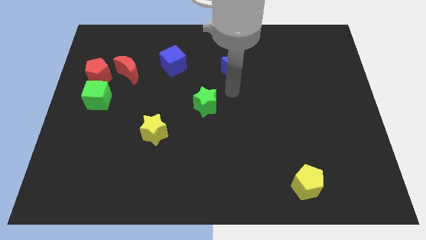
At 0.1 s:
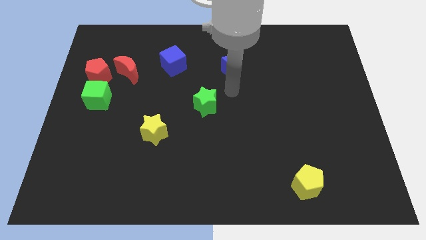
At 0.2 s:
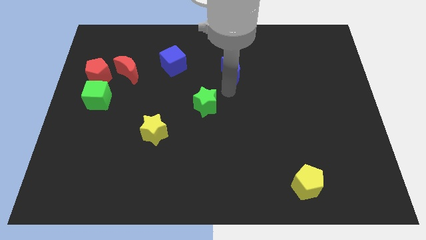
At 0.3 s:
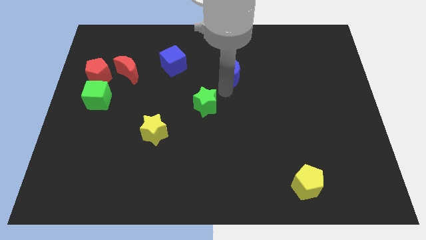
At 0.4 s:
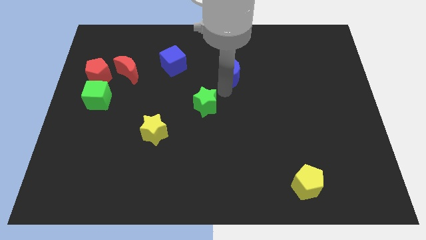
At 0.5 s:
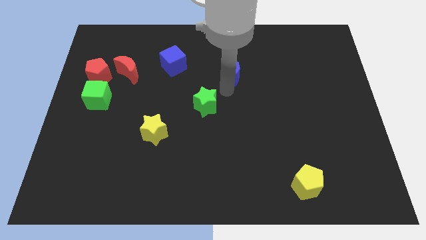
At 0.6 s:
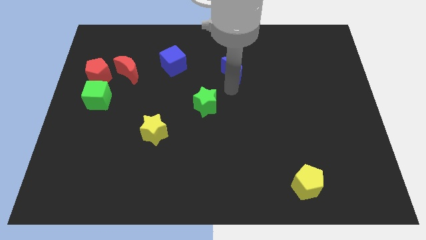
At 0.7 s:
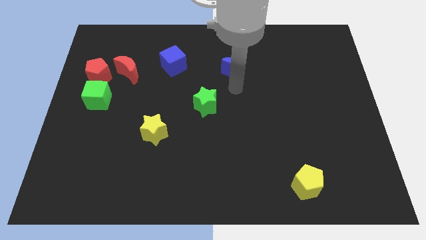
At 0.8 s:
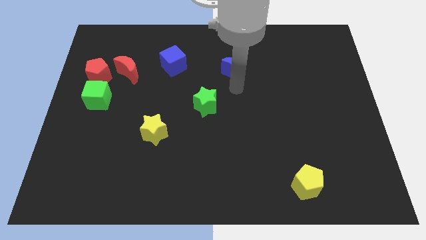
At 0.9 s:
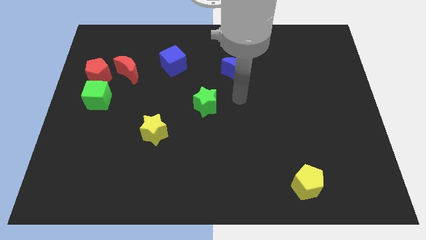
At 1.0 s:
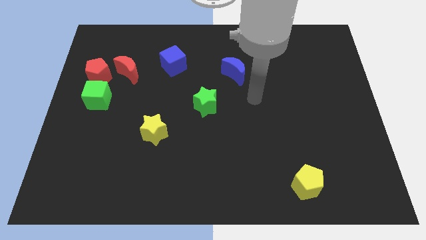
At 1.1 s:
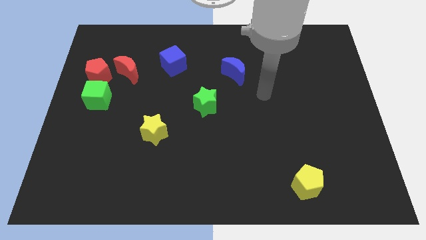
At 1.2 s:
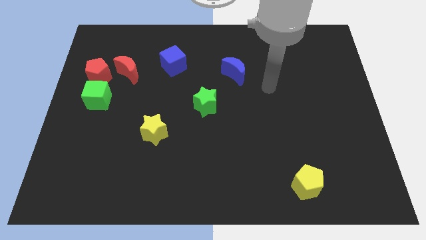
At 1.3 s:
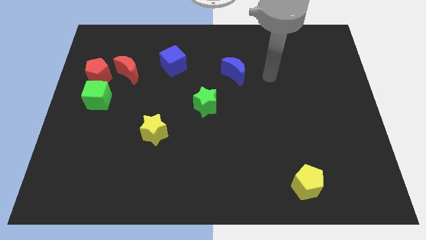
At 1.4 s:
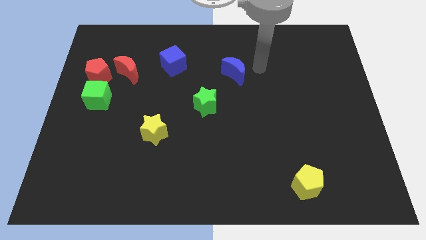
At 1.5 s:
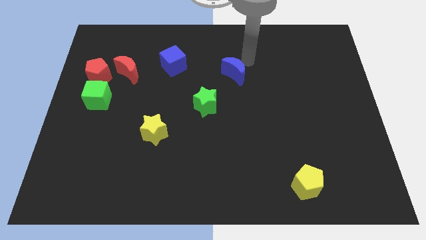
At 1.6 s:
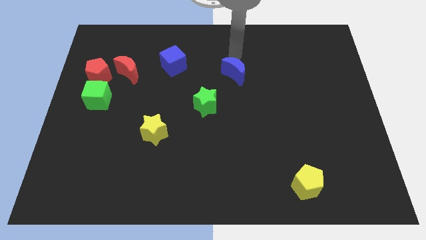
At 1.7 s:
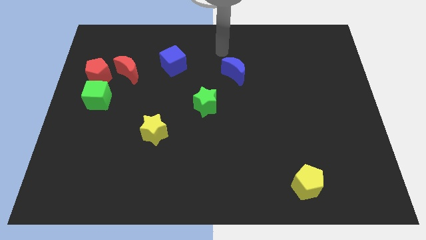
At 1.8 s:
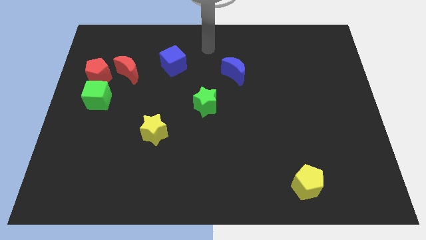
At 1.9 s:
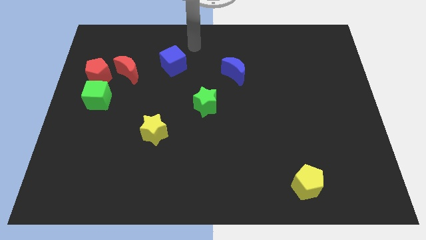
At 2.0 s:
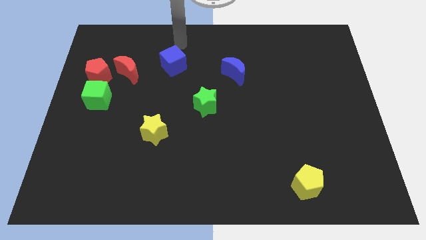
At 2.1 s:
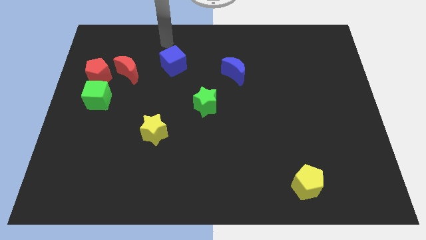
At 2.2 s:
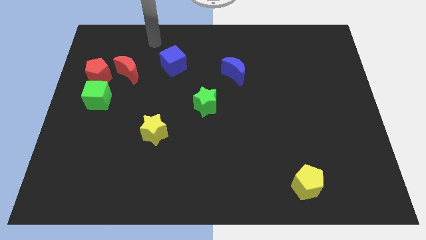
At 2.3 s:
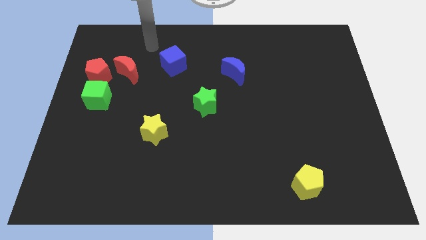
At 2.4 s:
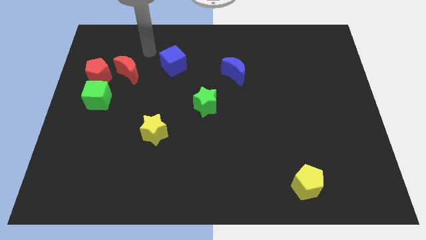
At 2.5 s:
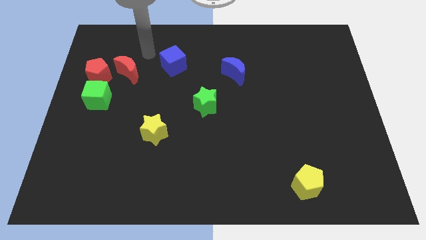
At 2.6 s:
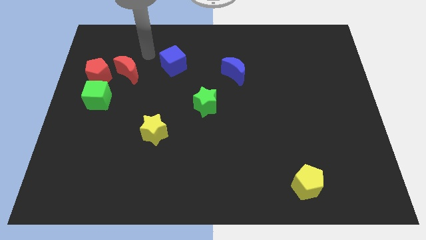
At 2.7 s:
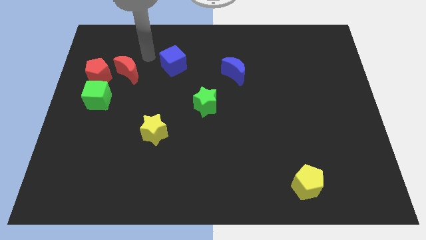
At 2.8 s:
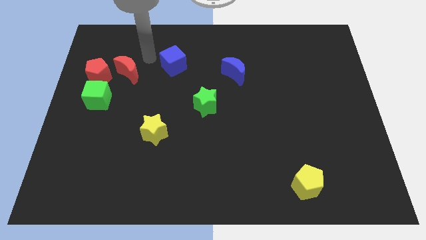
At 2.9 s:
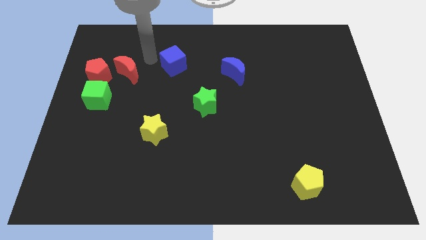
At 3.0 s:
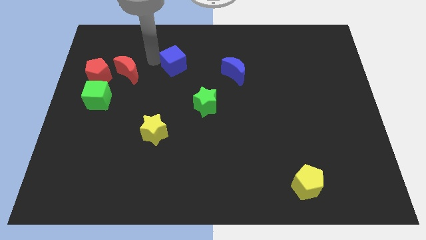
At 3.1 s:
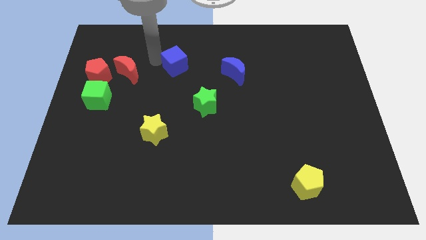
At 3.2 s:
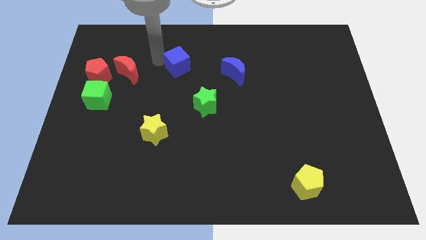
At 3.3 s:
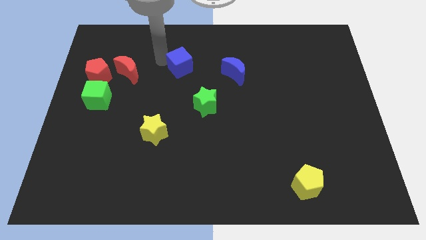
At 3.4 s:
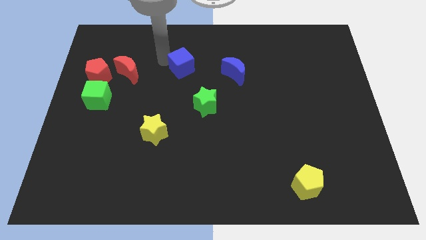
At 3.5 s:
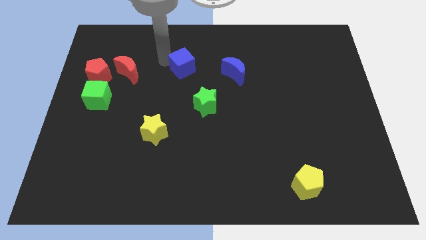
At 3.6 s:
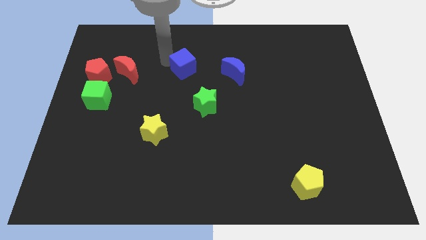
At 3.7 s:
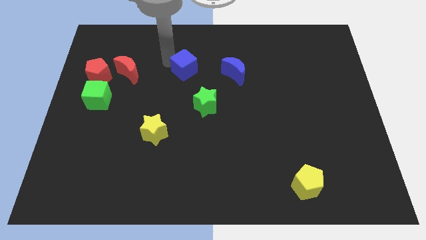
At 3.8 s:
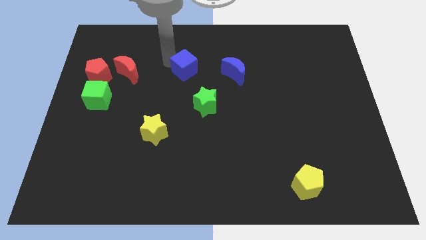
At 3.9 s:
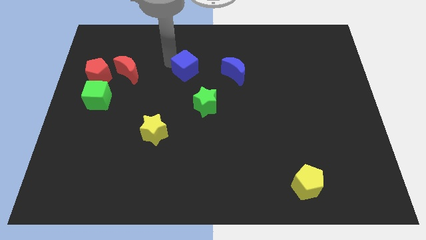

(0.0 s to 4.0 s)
move the blue cube to the left of the blue moon

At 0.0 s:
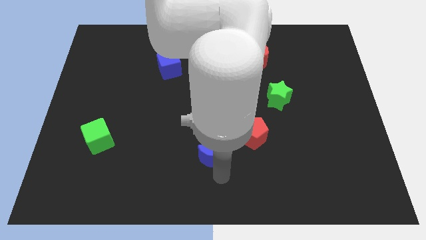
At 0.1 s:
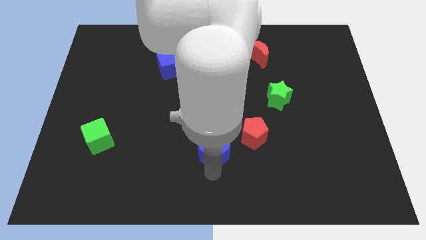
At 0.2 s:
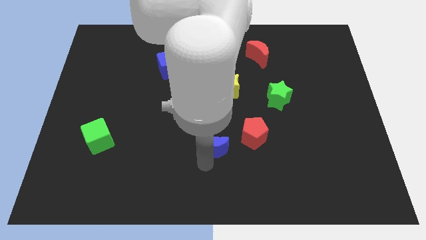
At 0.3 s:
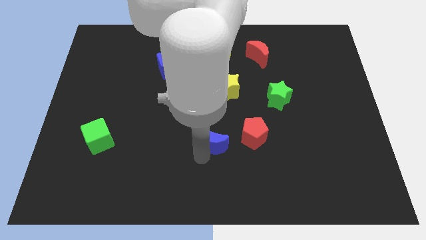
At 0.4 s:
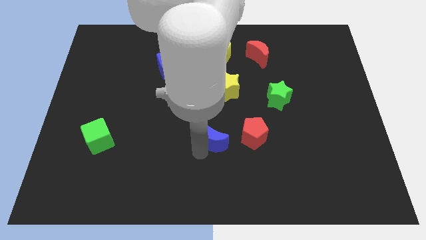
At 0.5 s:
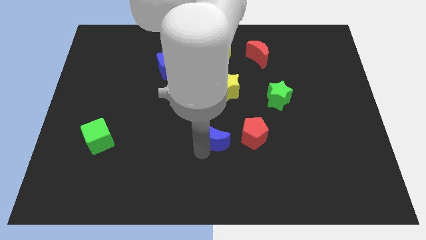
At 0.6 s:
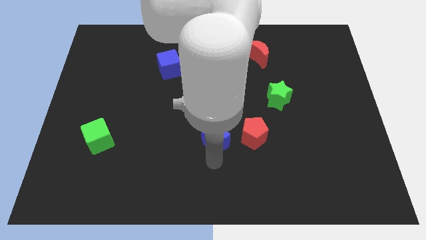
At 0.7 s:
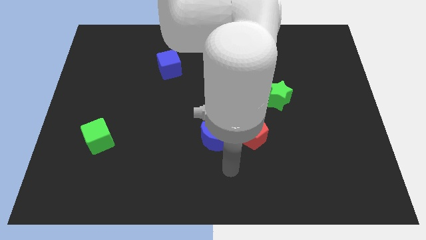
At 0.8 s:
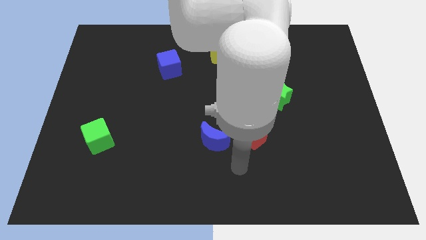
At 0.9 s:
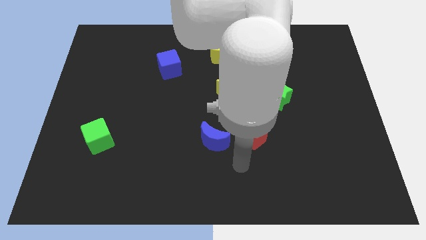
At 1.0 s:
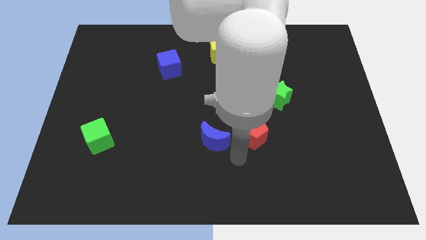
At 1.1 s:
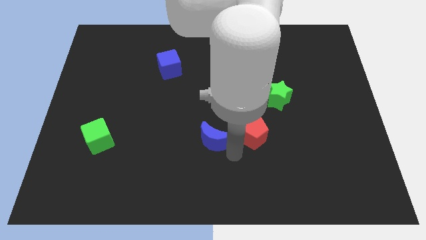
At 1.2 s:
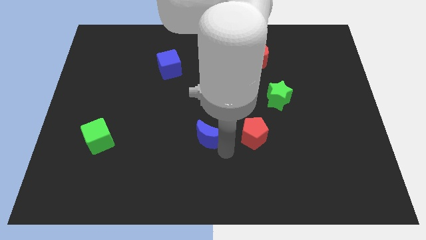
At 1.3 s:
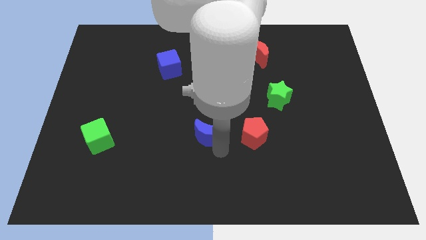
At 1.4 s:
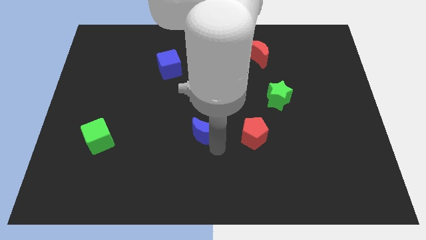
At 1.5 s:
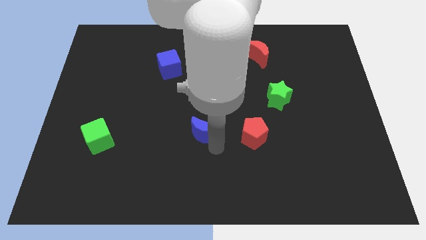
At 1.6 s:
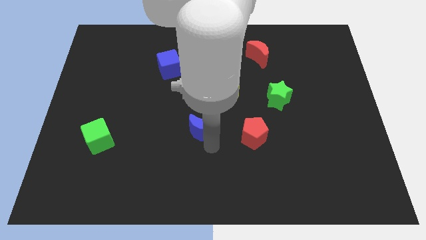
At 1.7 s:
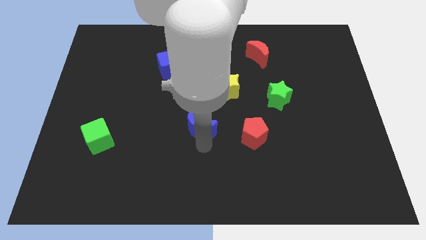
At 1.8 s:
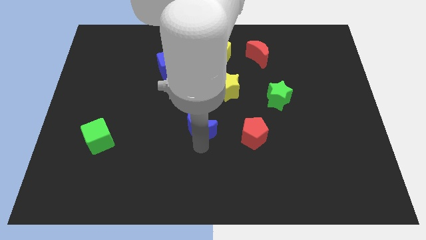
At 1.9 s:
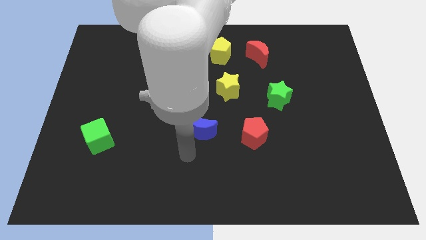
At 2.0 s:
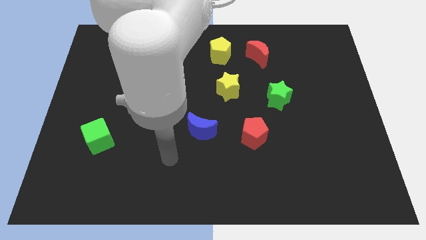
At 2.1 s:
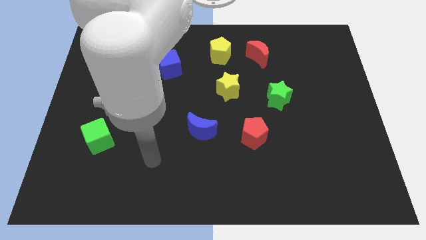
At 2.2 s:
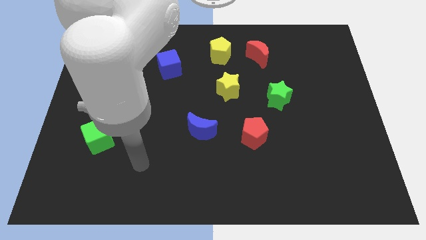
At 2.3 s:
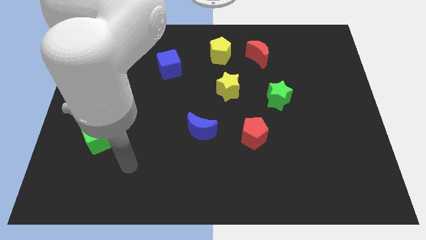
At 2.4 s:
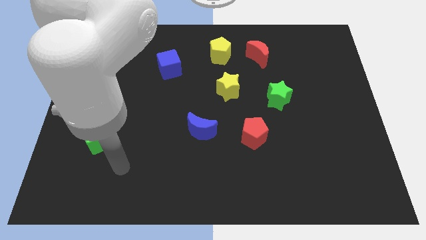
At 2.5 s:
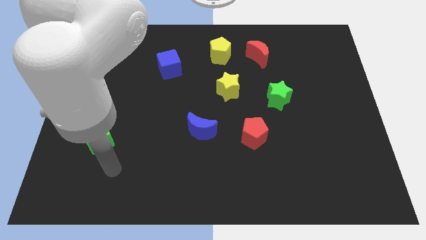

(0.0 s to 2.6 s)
slightly push blue moon upwards

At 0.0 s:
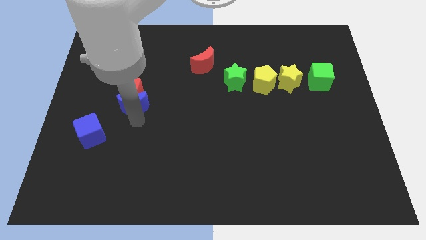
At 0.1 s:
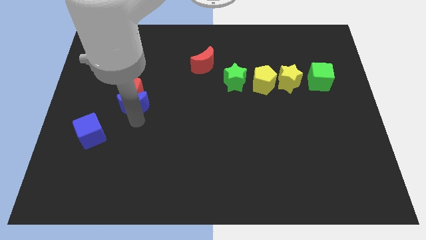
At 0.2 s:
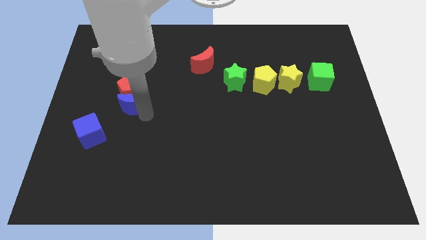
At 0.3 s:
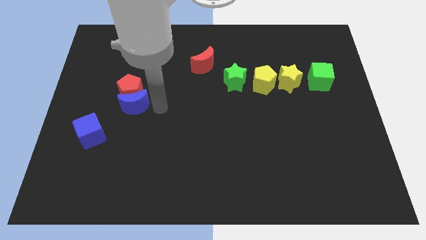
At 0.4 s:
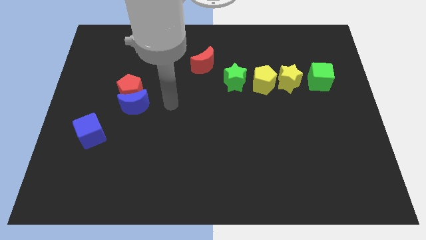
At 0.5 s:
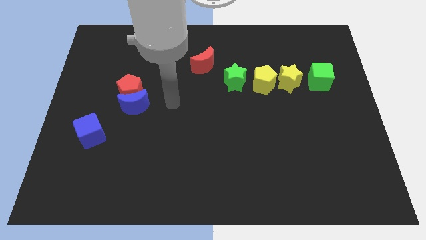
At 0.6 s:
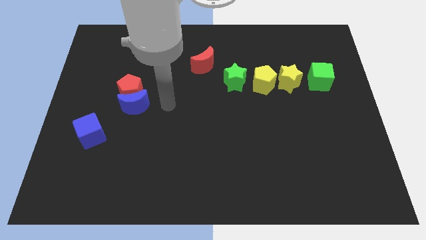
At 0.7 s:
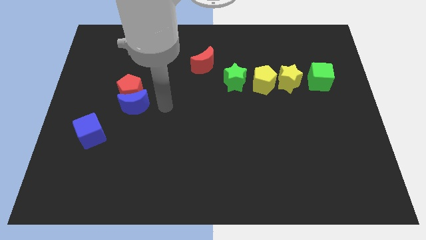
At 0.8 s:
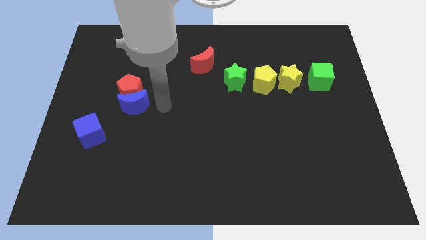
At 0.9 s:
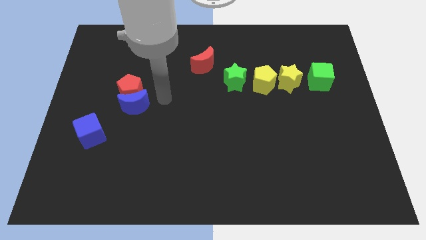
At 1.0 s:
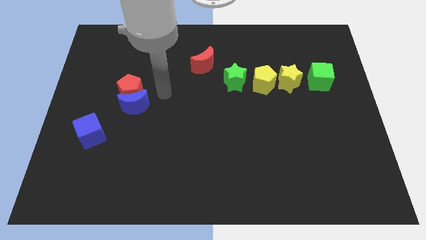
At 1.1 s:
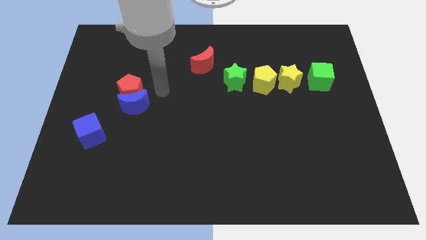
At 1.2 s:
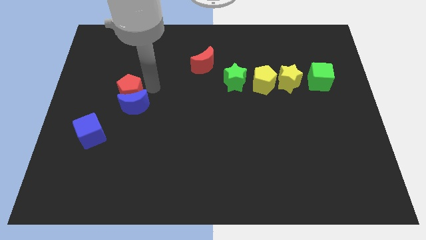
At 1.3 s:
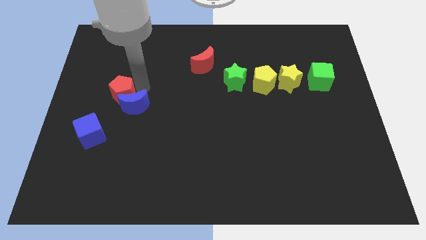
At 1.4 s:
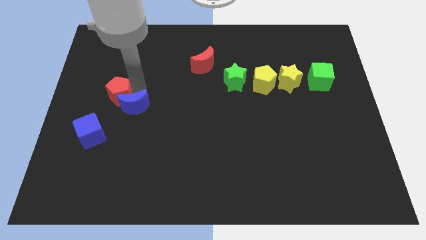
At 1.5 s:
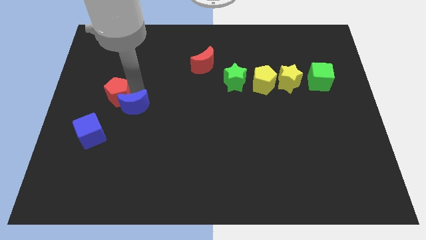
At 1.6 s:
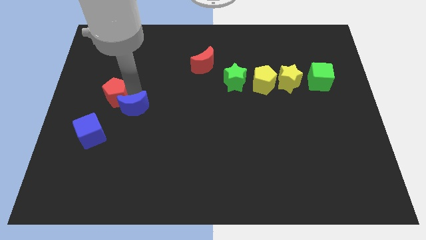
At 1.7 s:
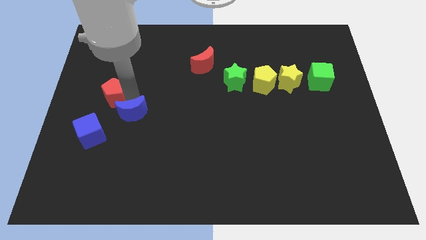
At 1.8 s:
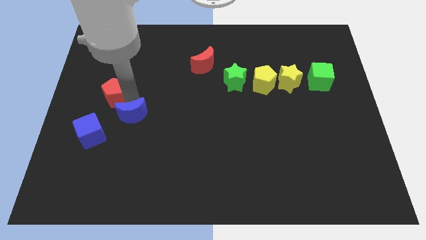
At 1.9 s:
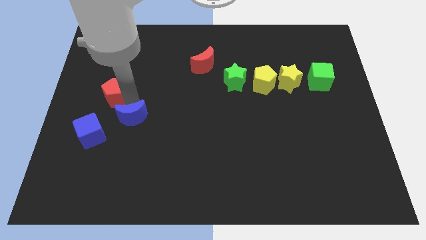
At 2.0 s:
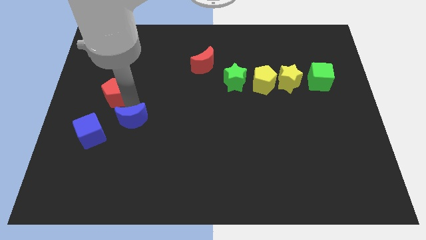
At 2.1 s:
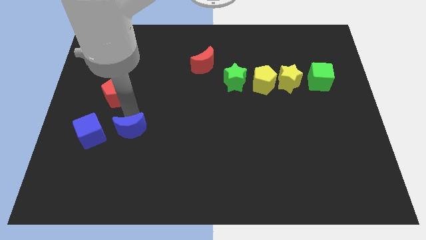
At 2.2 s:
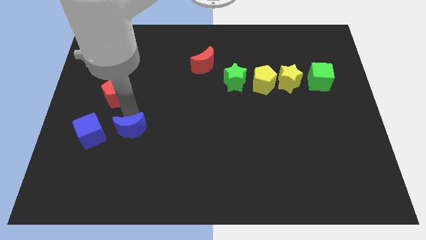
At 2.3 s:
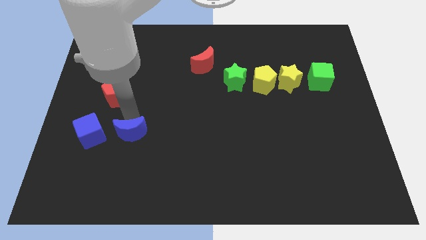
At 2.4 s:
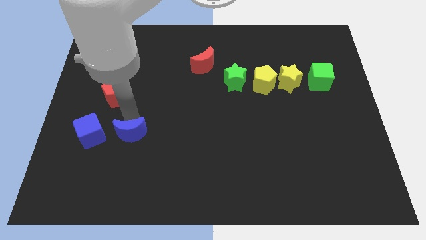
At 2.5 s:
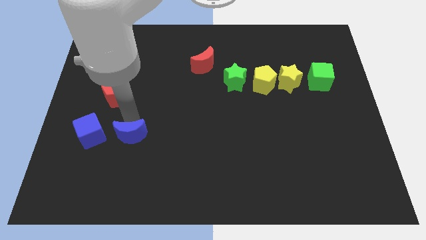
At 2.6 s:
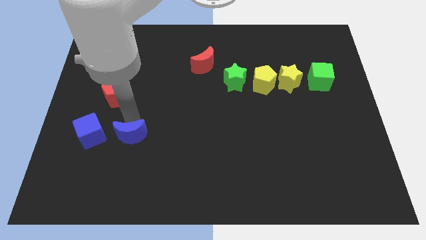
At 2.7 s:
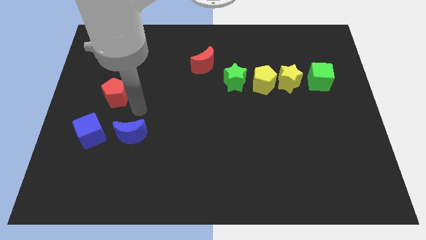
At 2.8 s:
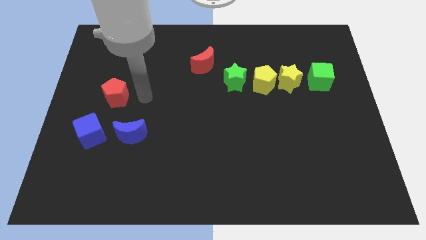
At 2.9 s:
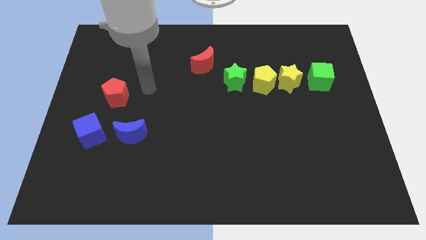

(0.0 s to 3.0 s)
slide the blue crescent to the right side of the blue cube
